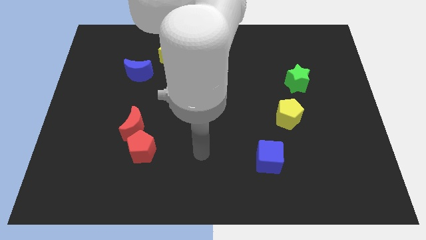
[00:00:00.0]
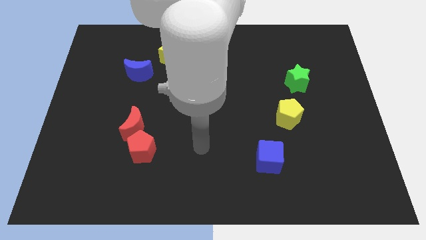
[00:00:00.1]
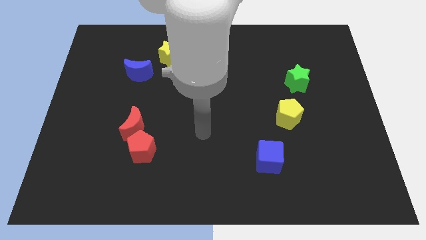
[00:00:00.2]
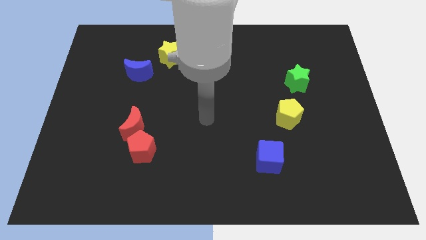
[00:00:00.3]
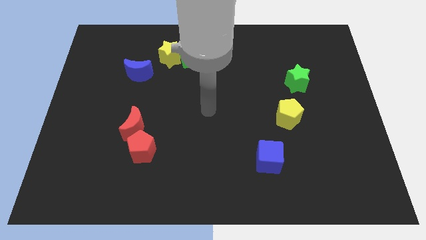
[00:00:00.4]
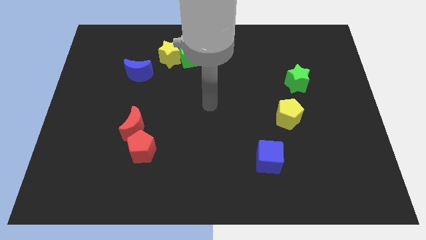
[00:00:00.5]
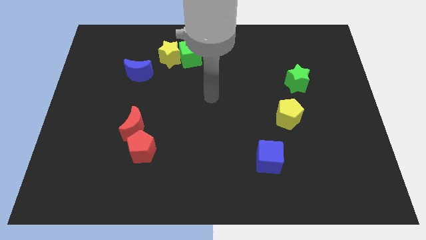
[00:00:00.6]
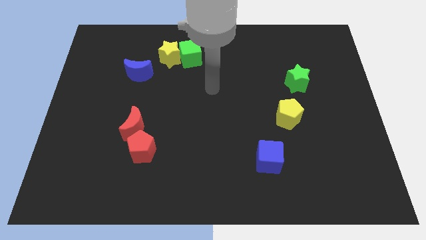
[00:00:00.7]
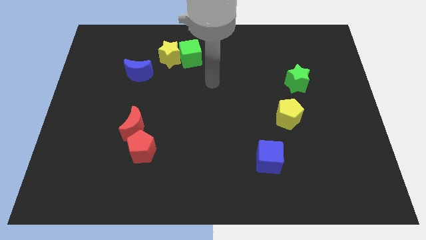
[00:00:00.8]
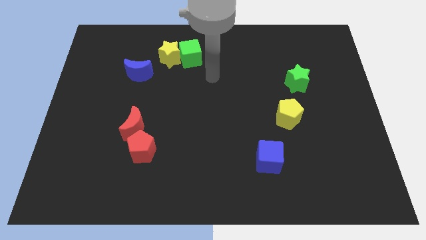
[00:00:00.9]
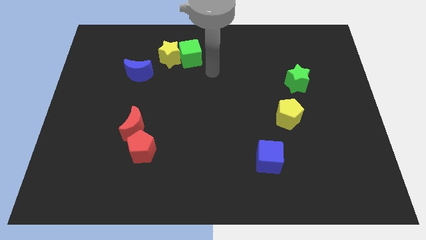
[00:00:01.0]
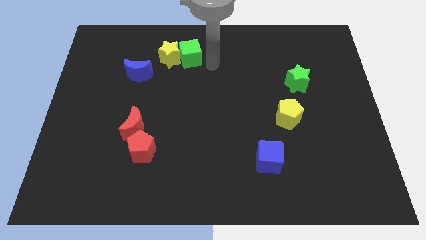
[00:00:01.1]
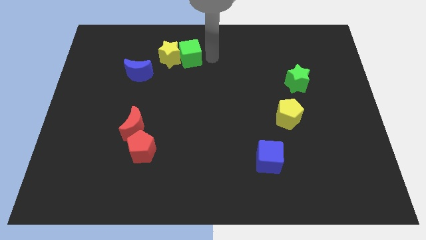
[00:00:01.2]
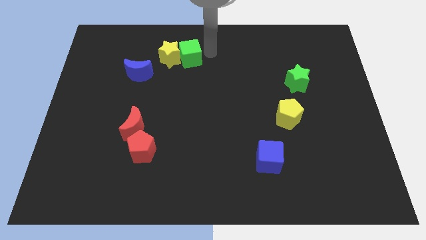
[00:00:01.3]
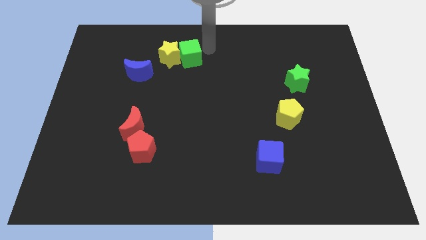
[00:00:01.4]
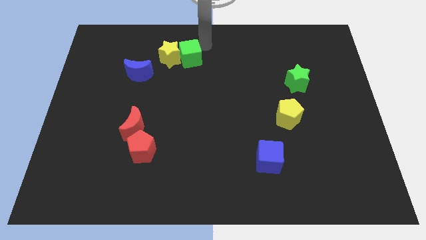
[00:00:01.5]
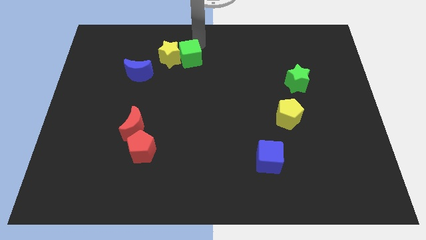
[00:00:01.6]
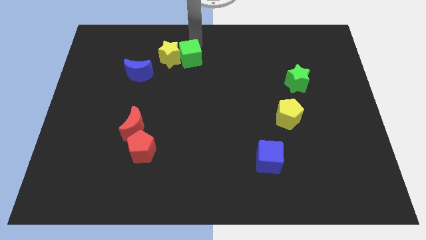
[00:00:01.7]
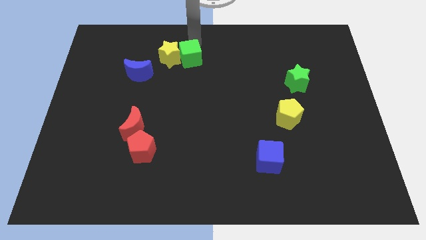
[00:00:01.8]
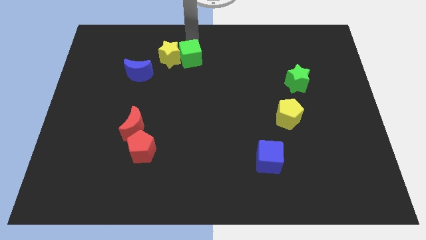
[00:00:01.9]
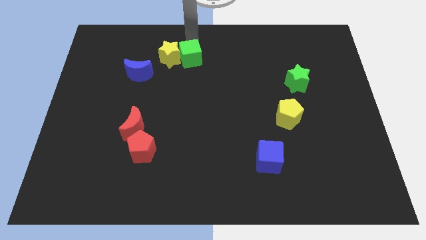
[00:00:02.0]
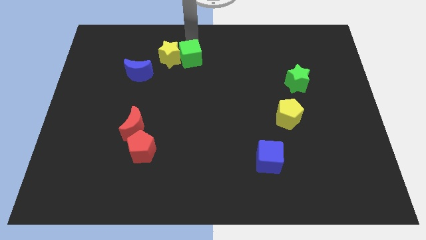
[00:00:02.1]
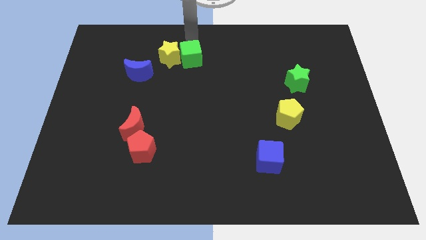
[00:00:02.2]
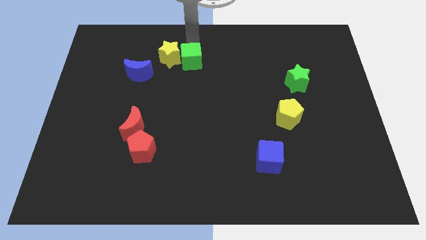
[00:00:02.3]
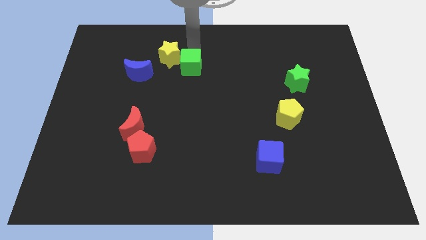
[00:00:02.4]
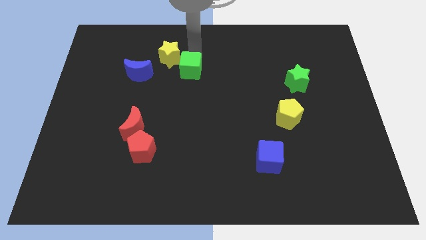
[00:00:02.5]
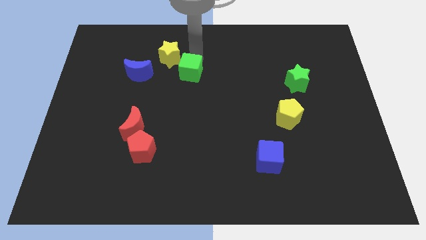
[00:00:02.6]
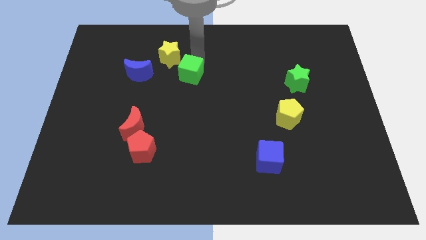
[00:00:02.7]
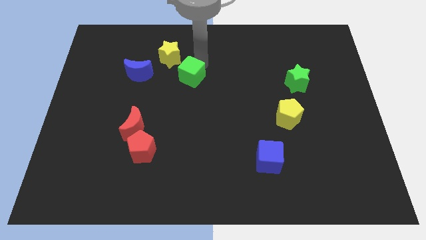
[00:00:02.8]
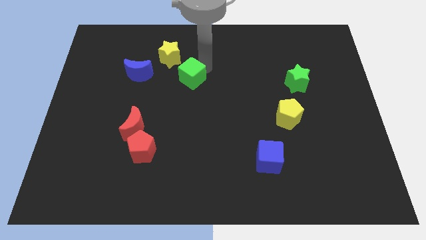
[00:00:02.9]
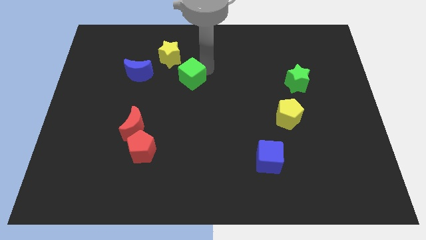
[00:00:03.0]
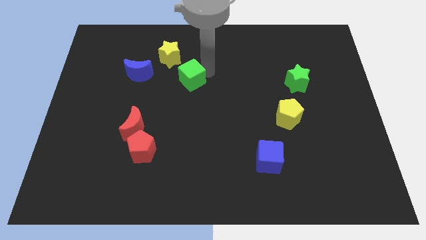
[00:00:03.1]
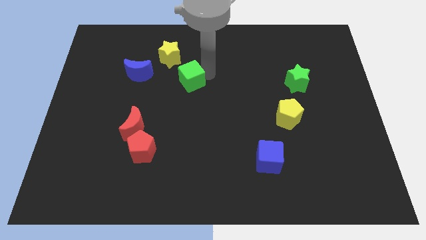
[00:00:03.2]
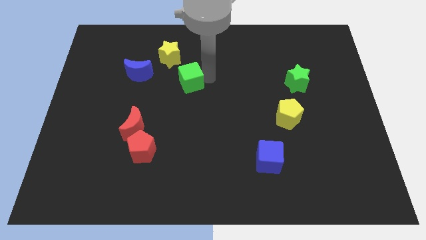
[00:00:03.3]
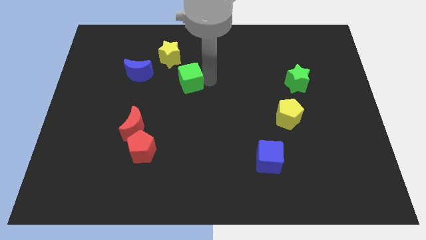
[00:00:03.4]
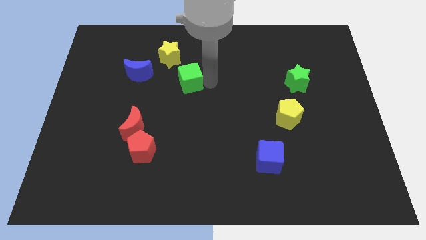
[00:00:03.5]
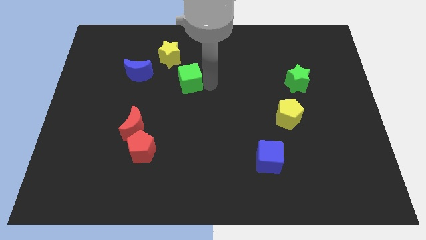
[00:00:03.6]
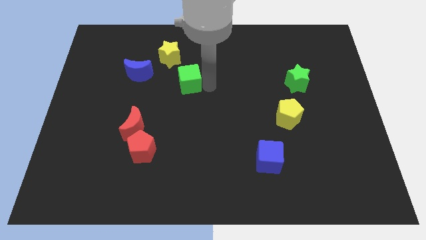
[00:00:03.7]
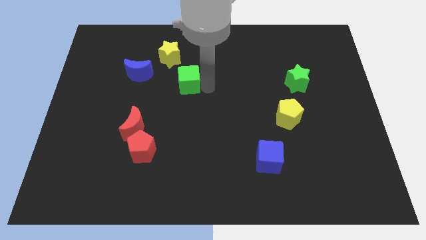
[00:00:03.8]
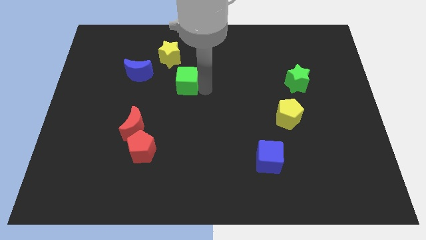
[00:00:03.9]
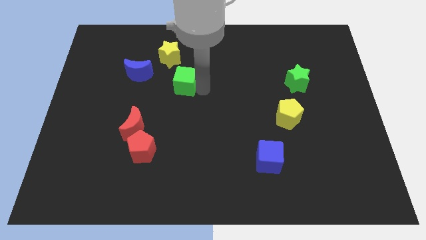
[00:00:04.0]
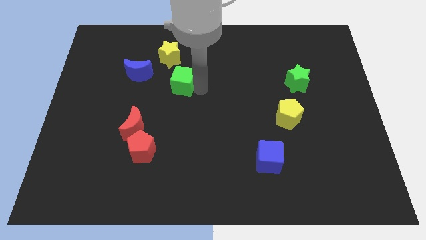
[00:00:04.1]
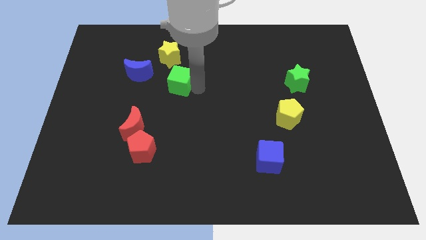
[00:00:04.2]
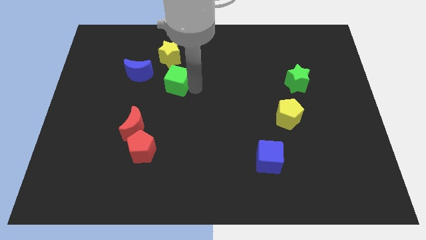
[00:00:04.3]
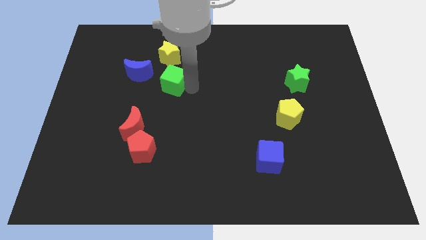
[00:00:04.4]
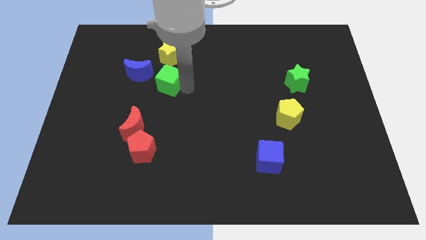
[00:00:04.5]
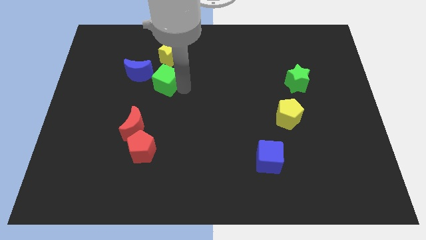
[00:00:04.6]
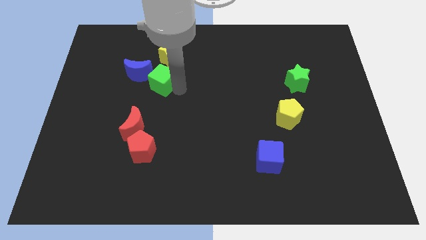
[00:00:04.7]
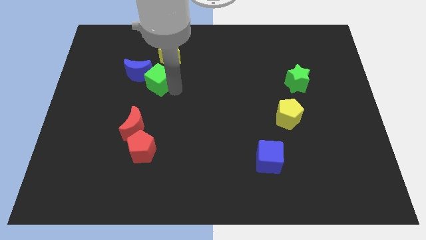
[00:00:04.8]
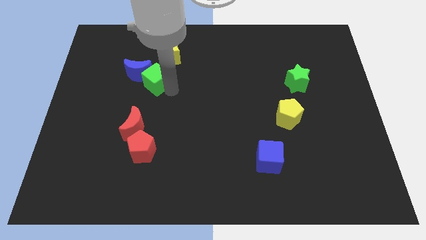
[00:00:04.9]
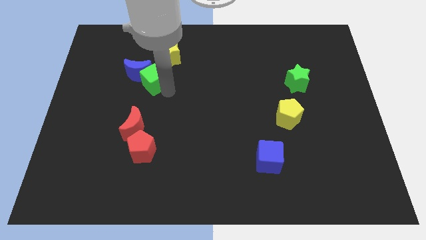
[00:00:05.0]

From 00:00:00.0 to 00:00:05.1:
push the green cube to the blue moon

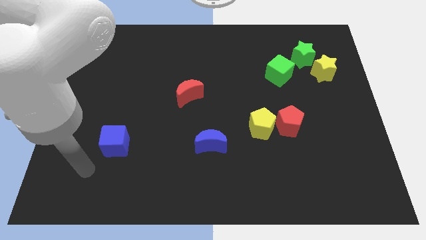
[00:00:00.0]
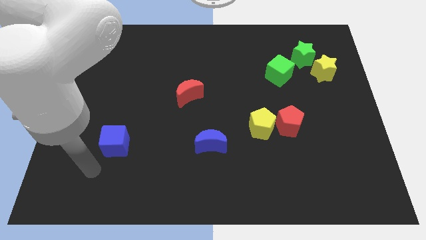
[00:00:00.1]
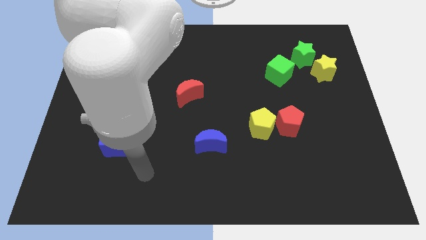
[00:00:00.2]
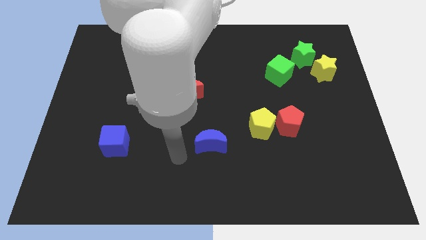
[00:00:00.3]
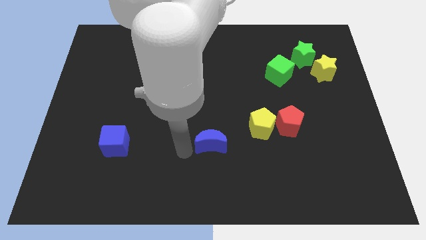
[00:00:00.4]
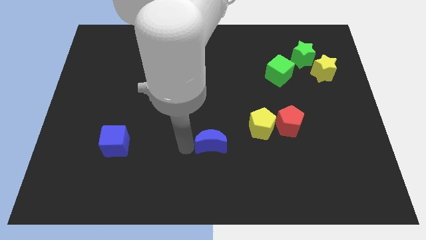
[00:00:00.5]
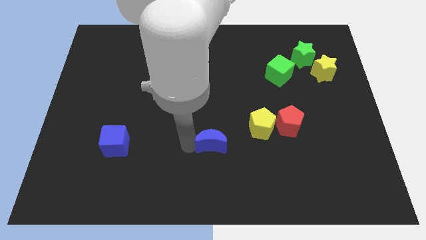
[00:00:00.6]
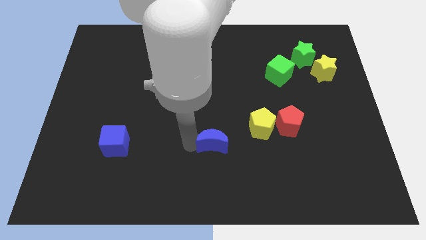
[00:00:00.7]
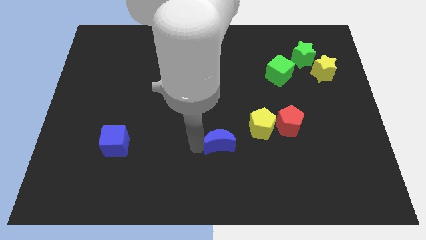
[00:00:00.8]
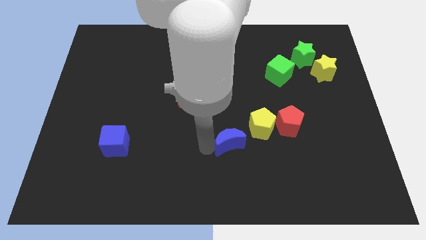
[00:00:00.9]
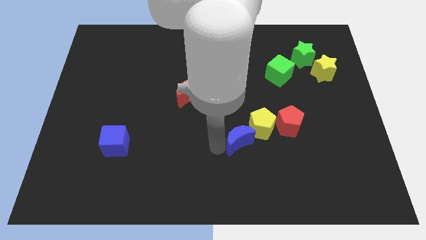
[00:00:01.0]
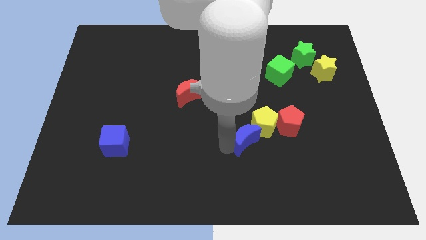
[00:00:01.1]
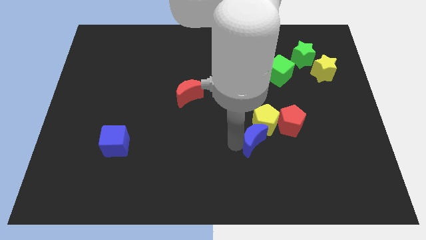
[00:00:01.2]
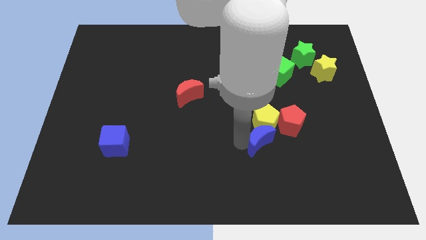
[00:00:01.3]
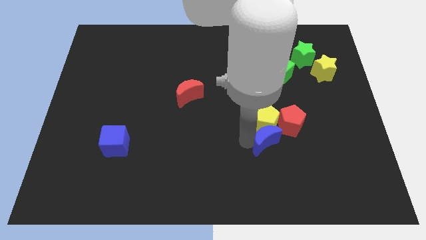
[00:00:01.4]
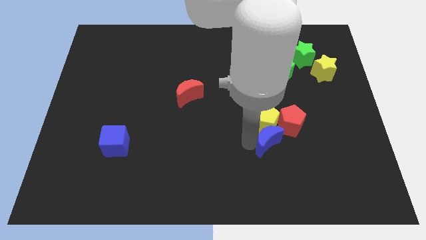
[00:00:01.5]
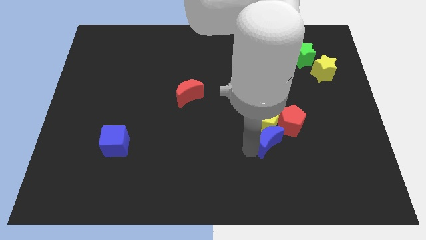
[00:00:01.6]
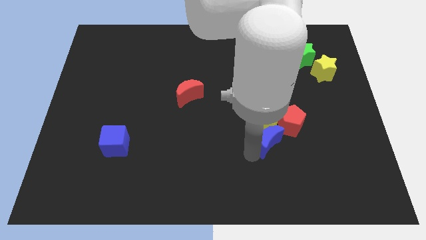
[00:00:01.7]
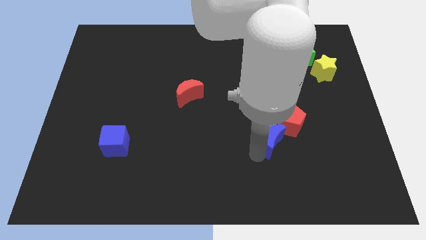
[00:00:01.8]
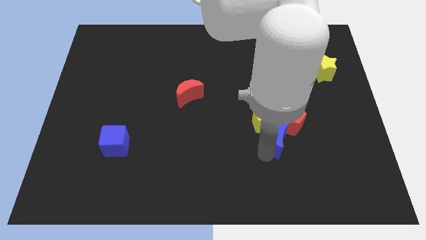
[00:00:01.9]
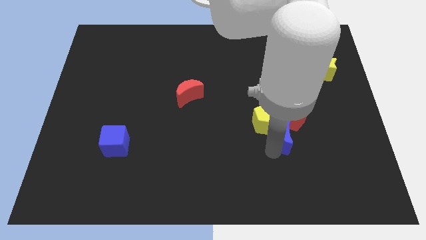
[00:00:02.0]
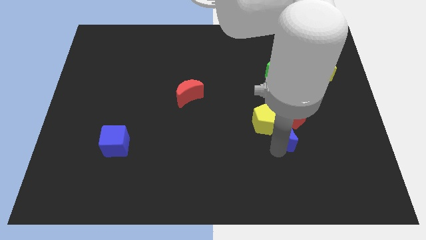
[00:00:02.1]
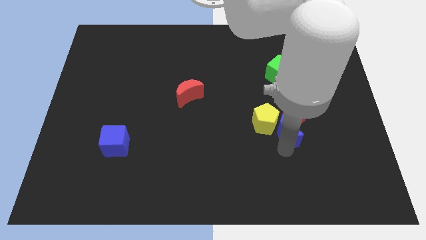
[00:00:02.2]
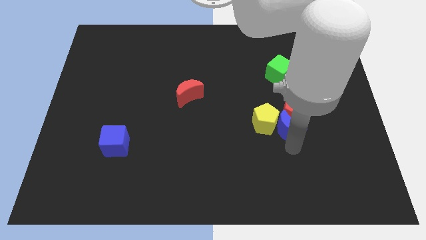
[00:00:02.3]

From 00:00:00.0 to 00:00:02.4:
put the blue moon next to the red pentagon

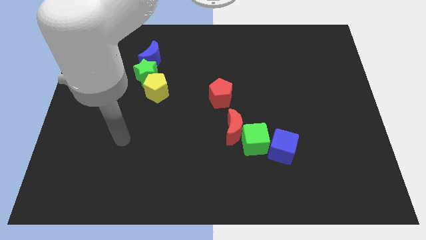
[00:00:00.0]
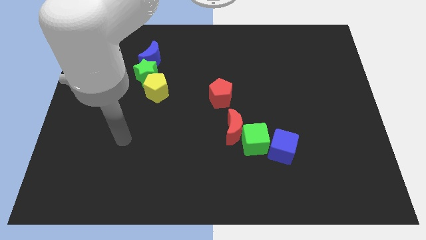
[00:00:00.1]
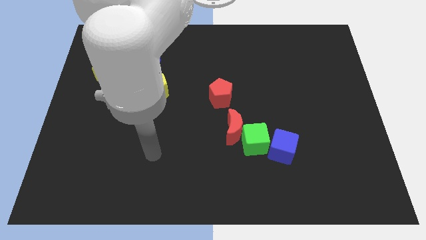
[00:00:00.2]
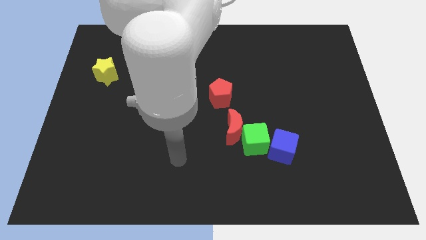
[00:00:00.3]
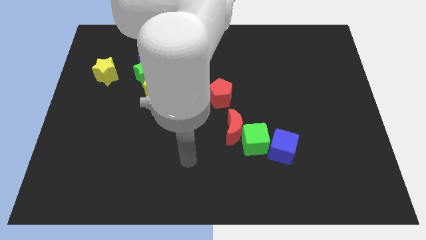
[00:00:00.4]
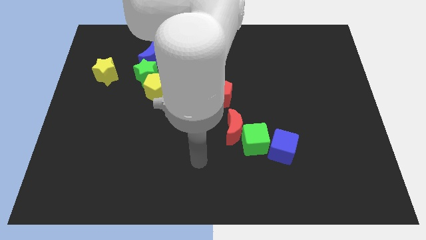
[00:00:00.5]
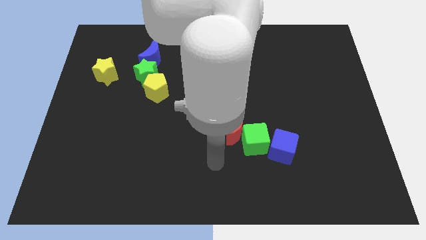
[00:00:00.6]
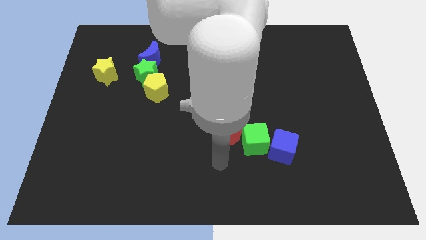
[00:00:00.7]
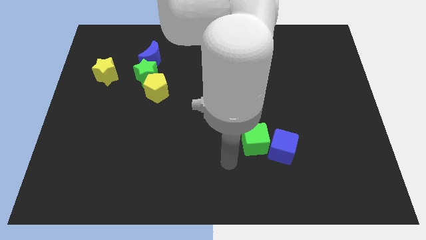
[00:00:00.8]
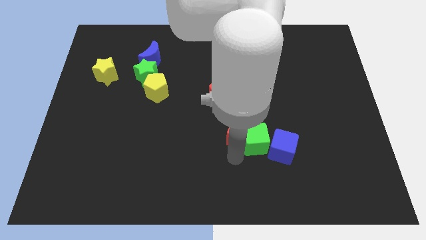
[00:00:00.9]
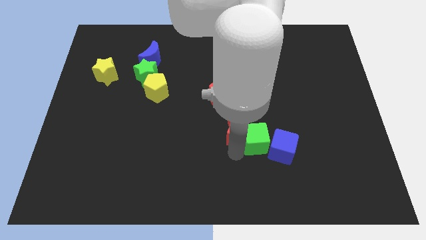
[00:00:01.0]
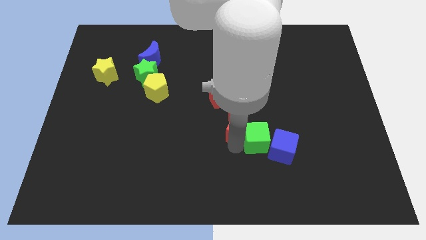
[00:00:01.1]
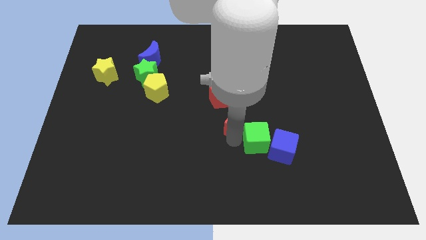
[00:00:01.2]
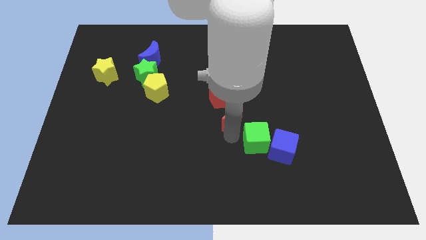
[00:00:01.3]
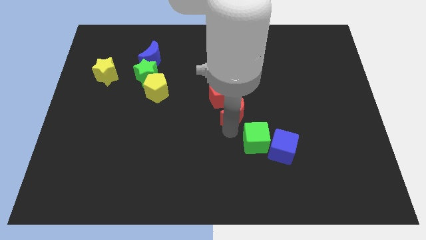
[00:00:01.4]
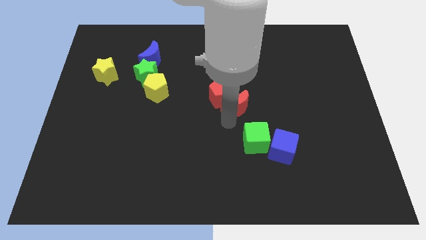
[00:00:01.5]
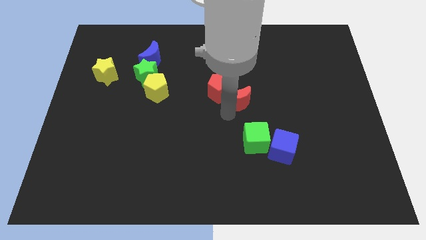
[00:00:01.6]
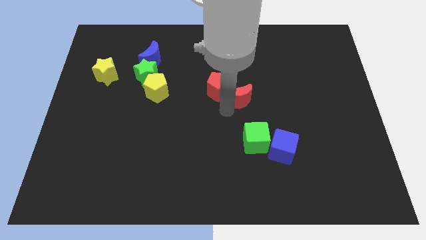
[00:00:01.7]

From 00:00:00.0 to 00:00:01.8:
slide the red moon towards the red pentagon
